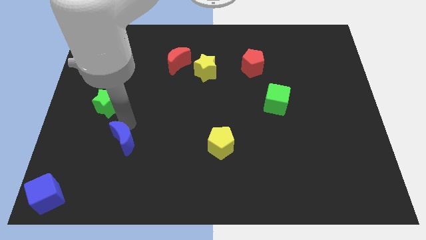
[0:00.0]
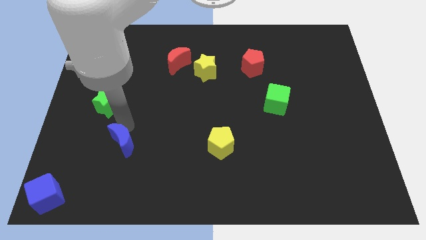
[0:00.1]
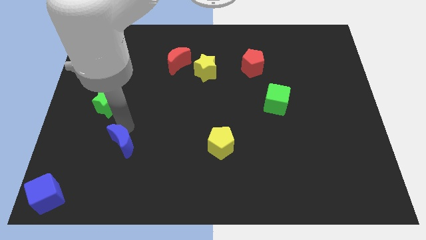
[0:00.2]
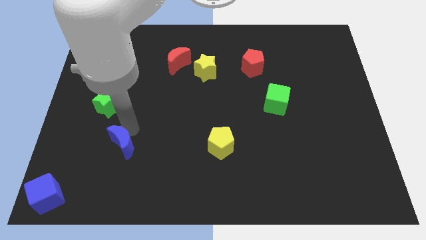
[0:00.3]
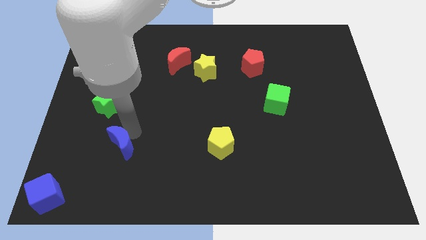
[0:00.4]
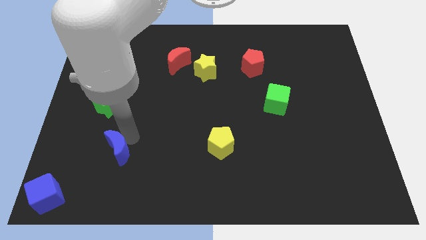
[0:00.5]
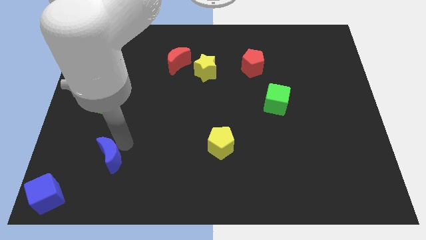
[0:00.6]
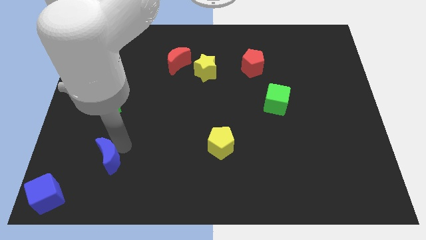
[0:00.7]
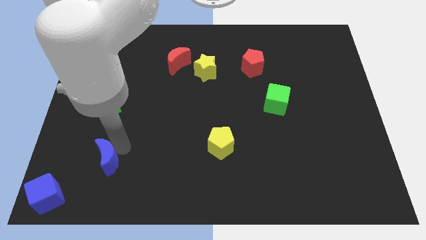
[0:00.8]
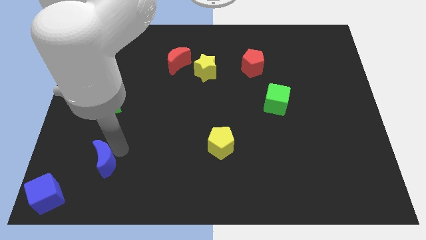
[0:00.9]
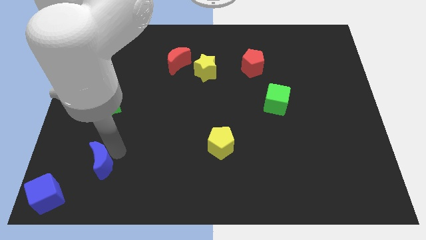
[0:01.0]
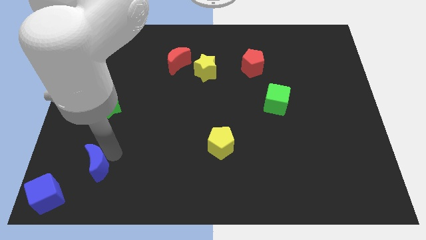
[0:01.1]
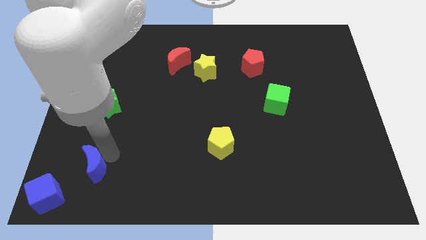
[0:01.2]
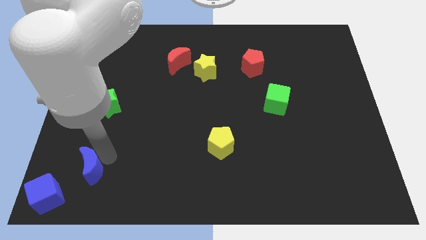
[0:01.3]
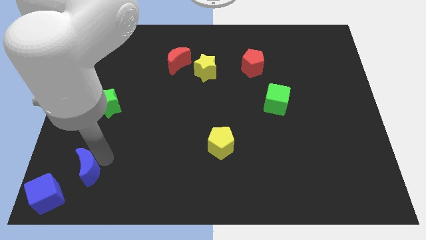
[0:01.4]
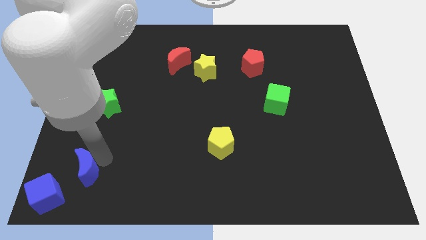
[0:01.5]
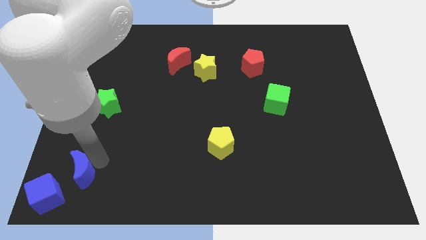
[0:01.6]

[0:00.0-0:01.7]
move the blue moon diagonal to the blue cube

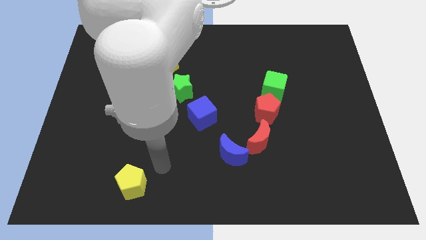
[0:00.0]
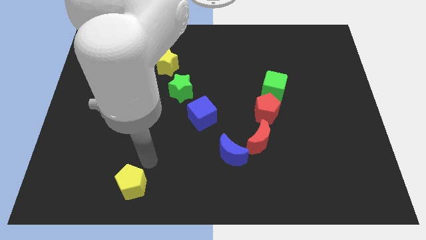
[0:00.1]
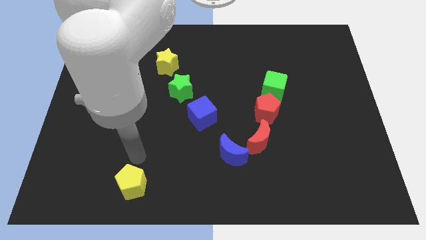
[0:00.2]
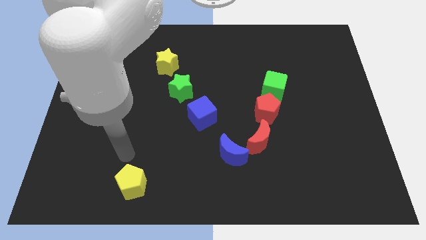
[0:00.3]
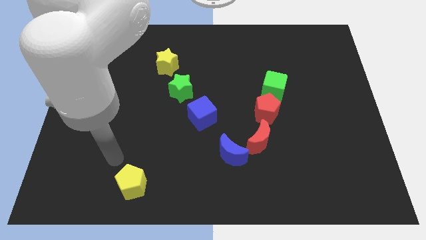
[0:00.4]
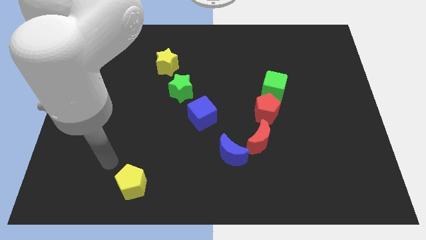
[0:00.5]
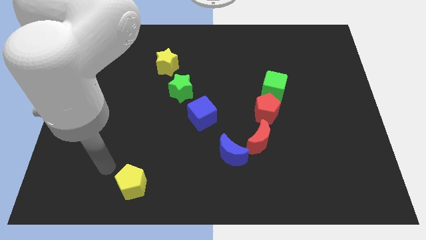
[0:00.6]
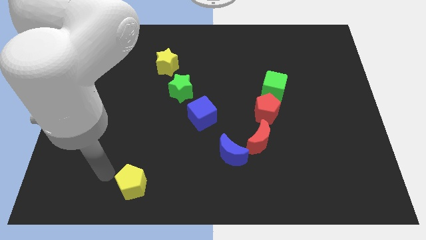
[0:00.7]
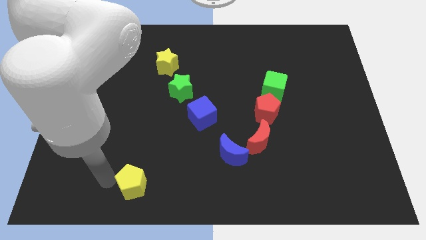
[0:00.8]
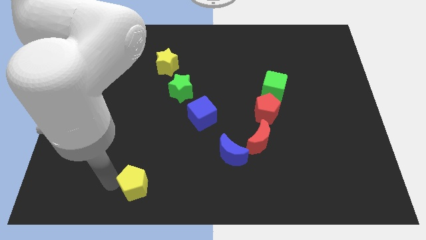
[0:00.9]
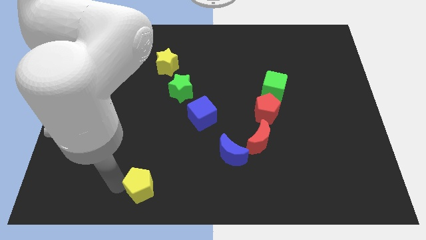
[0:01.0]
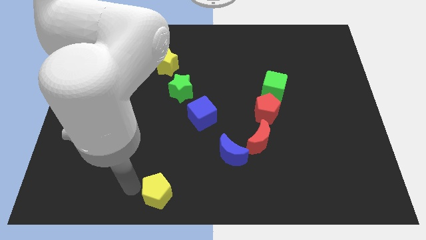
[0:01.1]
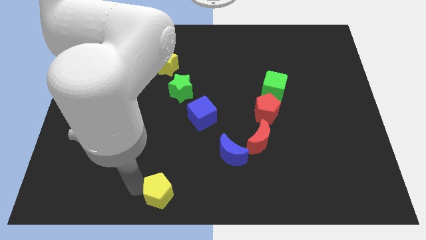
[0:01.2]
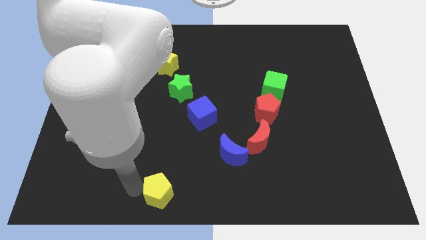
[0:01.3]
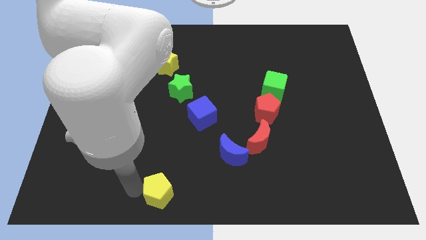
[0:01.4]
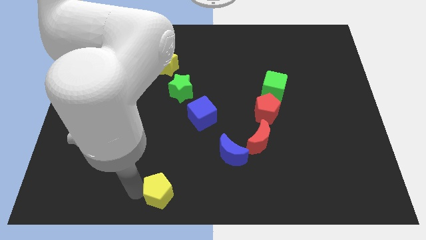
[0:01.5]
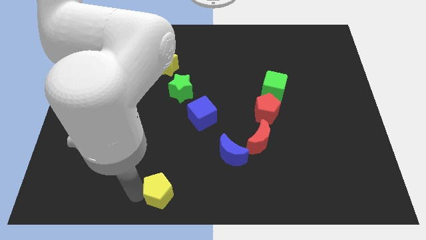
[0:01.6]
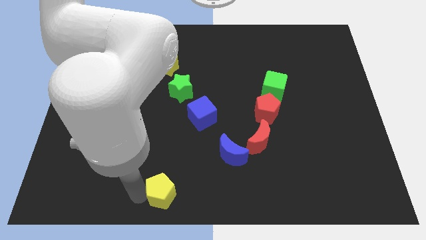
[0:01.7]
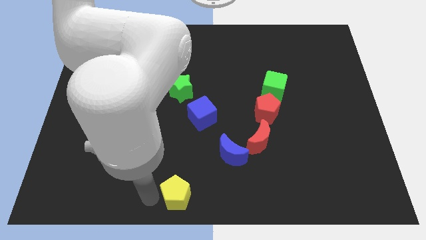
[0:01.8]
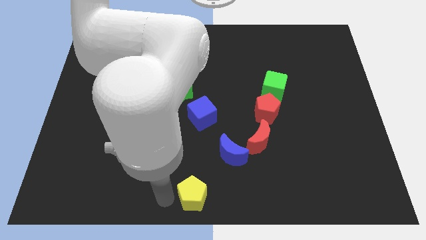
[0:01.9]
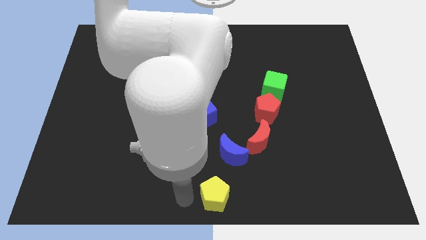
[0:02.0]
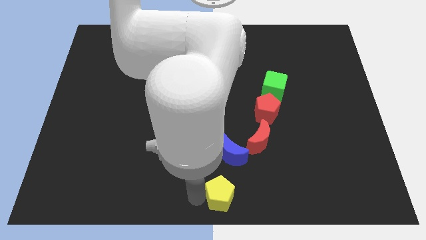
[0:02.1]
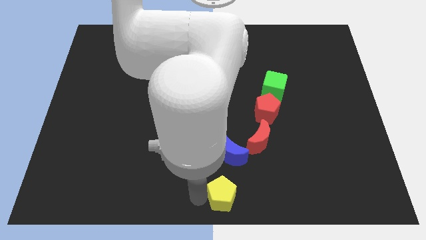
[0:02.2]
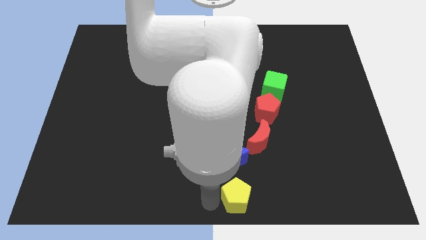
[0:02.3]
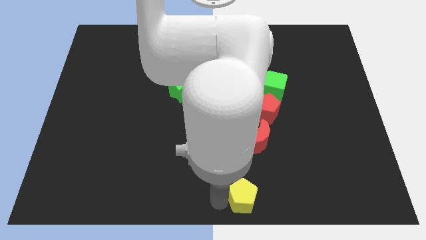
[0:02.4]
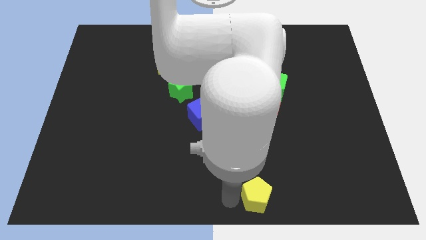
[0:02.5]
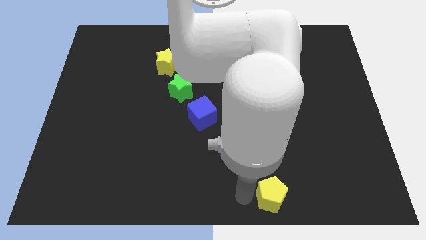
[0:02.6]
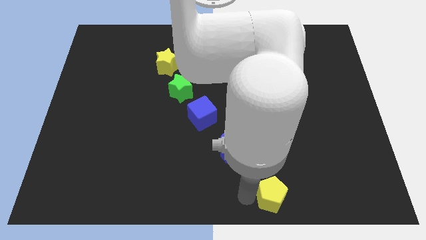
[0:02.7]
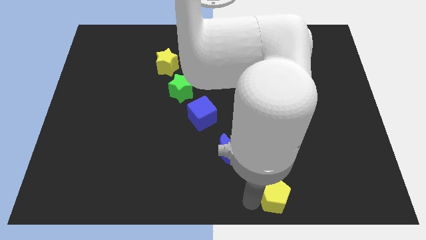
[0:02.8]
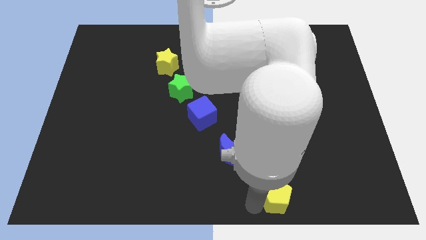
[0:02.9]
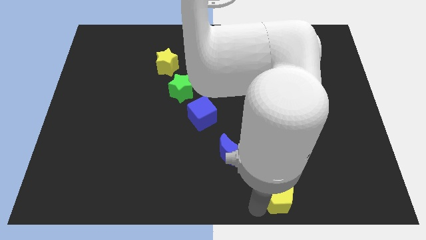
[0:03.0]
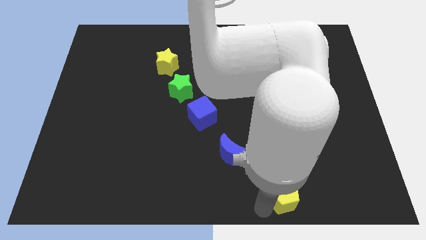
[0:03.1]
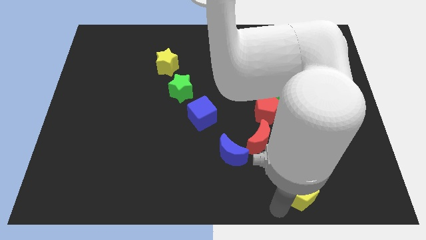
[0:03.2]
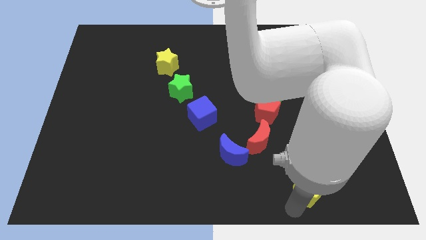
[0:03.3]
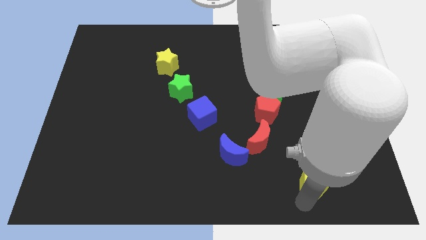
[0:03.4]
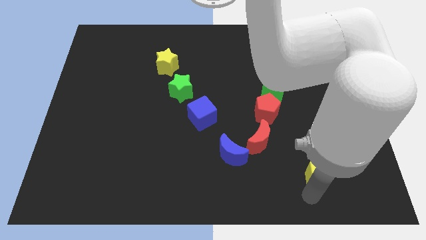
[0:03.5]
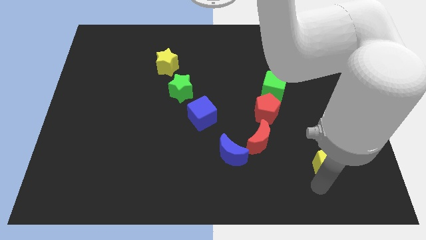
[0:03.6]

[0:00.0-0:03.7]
move the yellow pentagon diagonally bottom right to the red moon

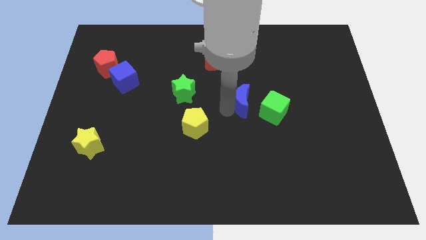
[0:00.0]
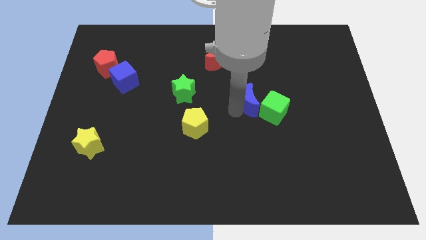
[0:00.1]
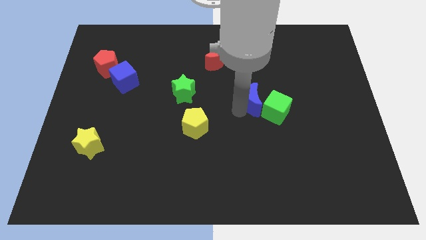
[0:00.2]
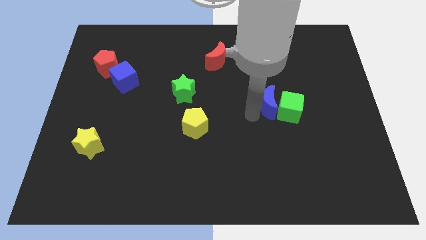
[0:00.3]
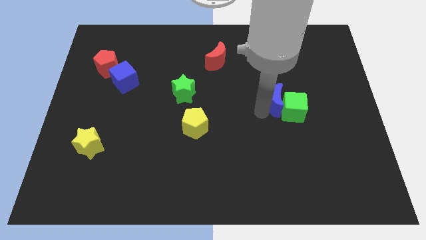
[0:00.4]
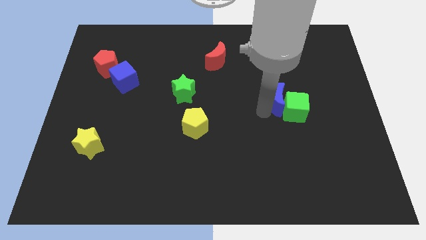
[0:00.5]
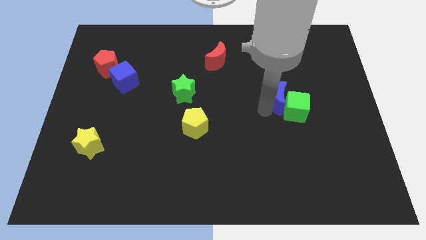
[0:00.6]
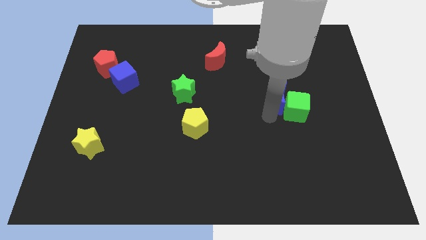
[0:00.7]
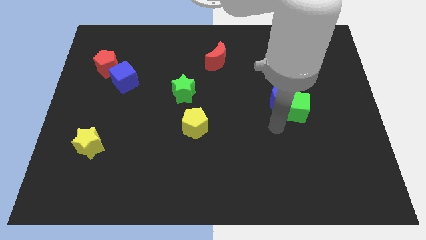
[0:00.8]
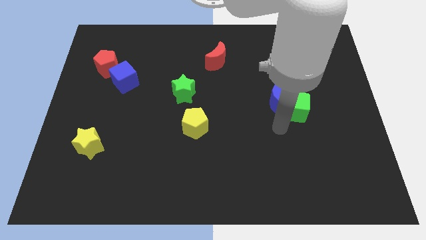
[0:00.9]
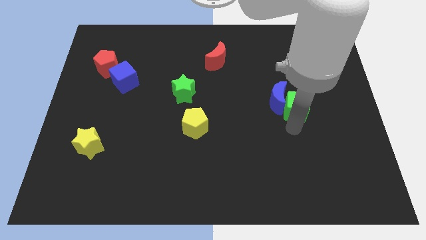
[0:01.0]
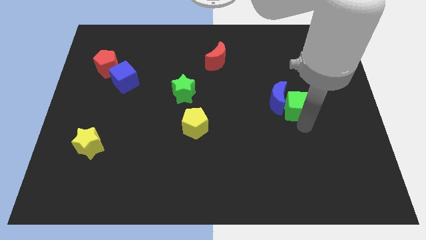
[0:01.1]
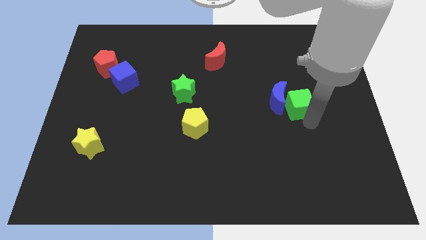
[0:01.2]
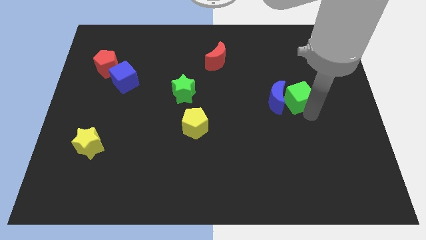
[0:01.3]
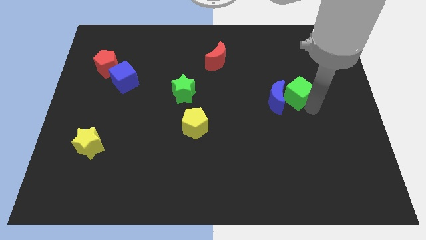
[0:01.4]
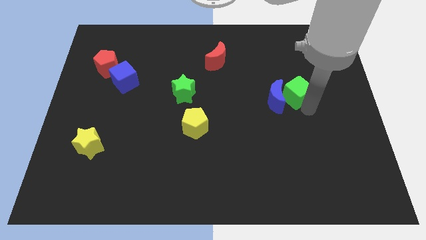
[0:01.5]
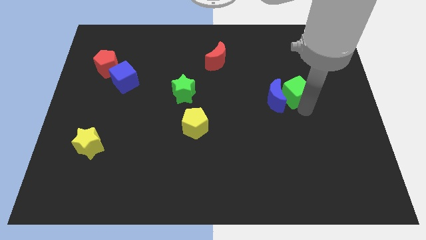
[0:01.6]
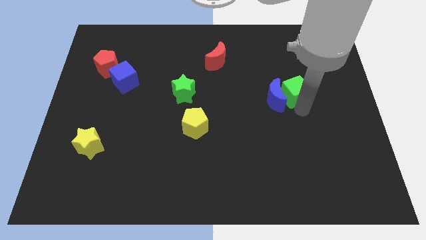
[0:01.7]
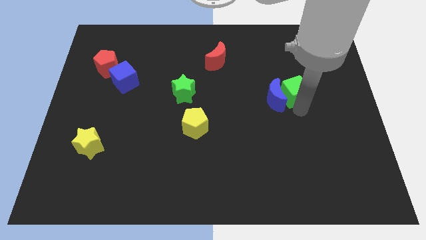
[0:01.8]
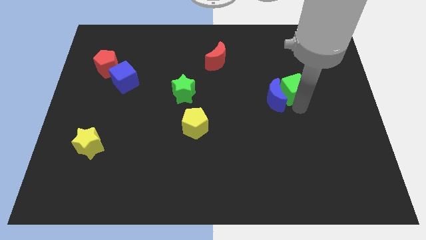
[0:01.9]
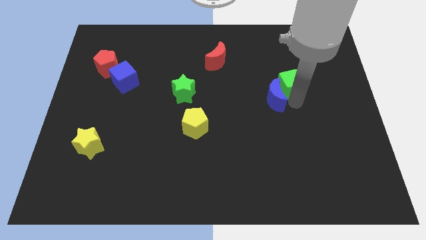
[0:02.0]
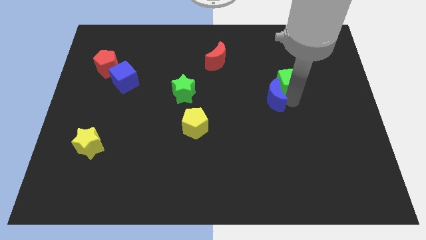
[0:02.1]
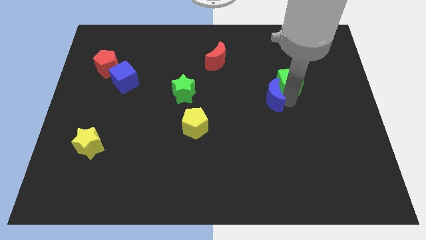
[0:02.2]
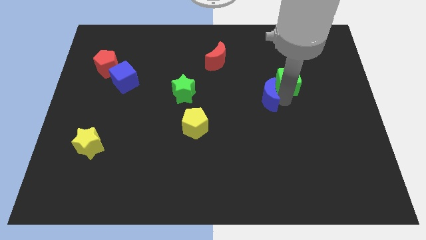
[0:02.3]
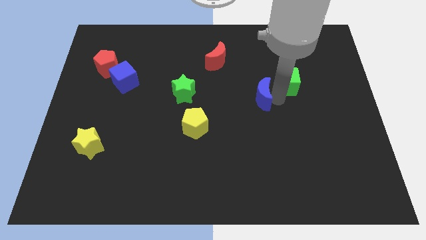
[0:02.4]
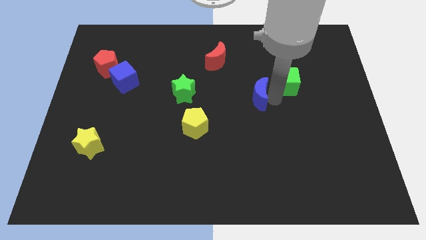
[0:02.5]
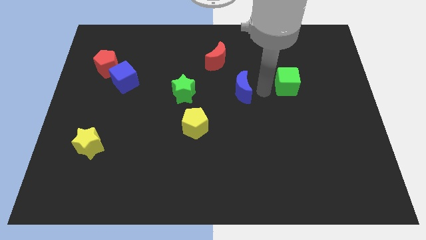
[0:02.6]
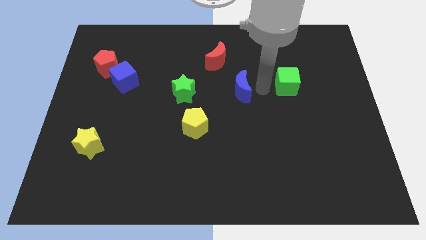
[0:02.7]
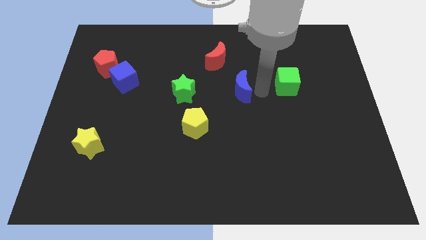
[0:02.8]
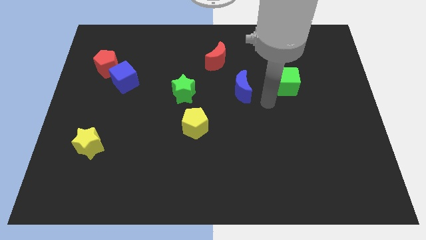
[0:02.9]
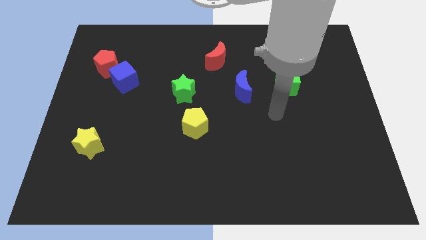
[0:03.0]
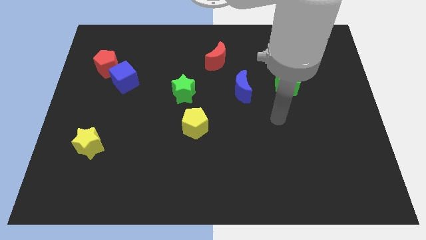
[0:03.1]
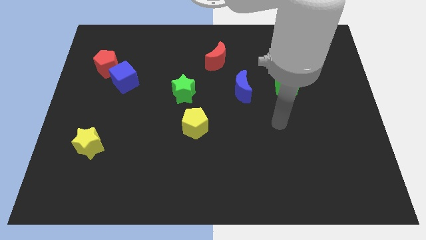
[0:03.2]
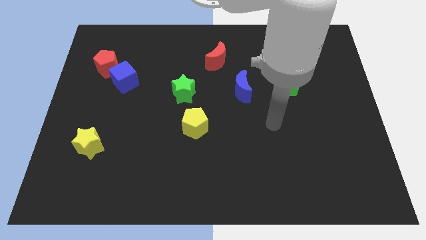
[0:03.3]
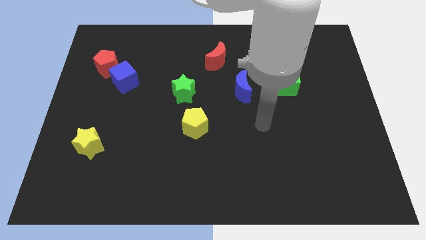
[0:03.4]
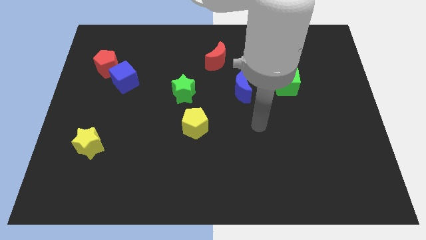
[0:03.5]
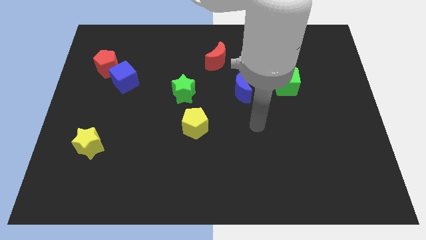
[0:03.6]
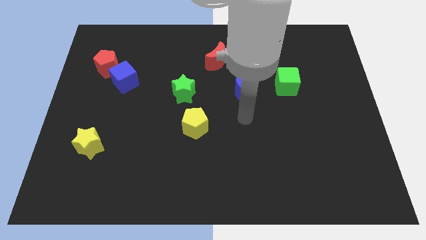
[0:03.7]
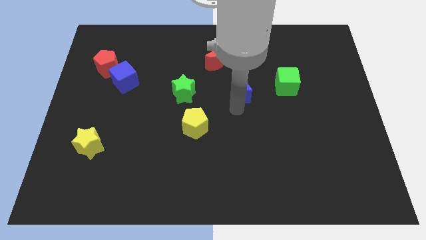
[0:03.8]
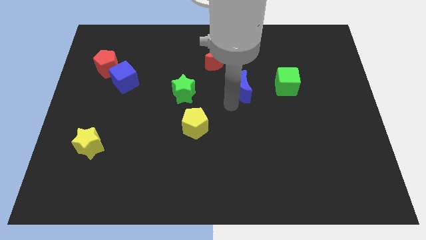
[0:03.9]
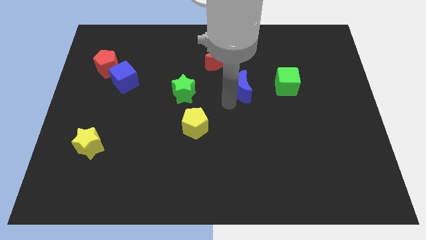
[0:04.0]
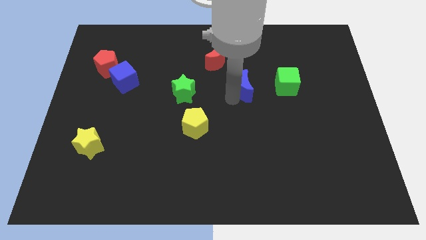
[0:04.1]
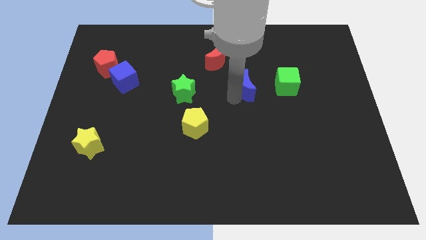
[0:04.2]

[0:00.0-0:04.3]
place the blue moon in between green star and green cube
